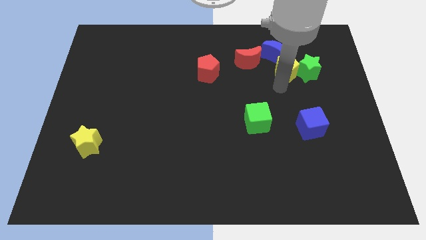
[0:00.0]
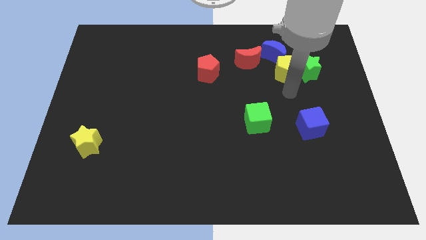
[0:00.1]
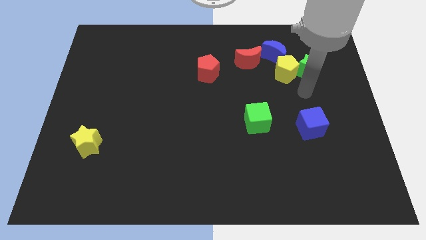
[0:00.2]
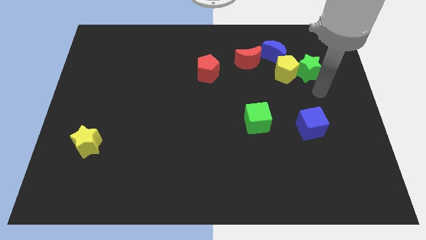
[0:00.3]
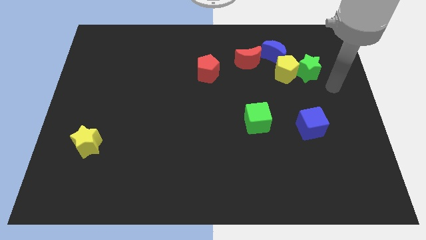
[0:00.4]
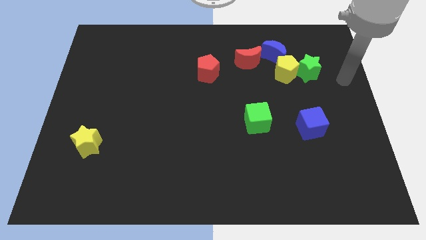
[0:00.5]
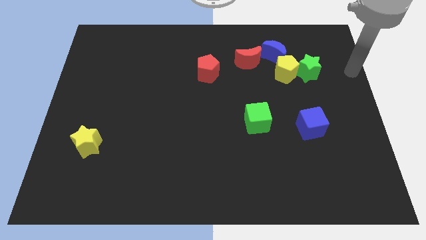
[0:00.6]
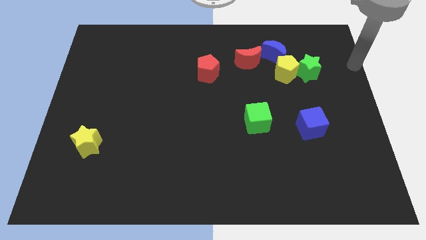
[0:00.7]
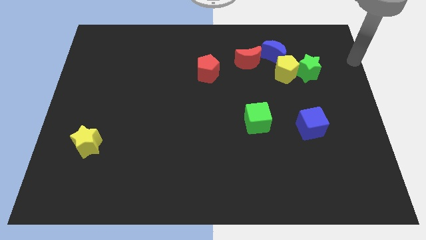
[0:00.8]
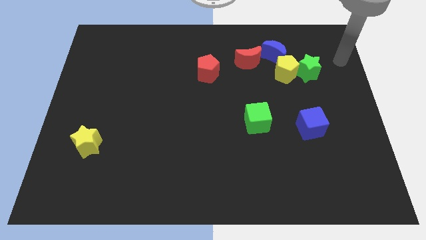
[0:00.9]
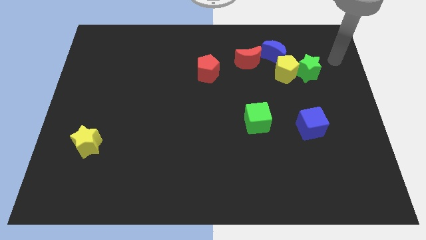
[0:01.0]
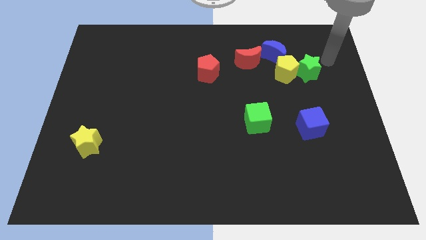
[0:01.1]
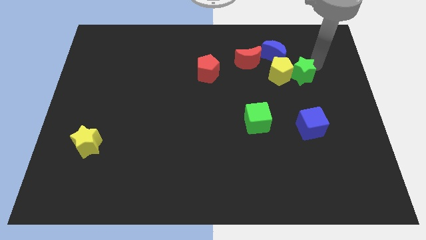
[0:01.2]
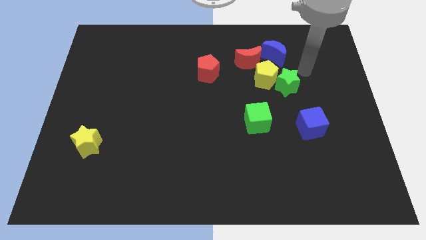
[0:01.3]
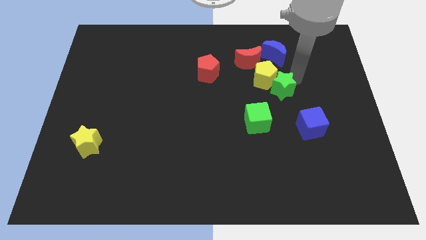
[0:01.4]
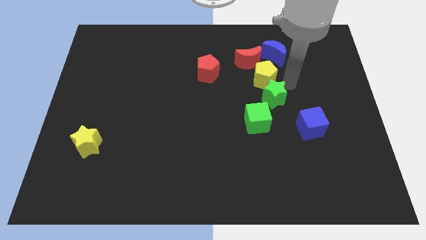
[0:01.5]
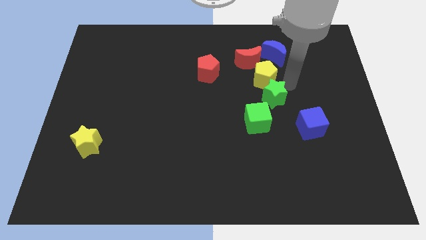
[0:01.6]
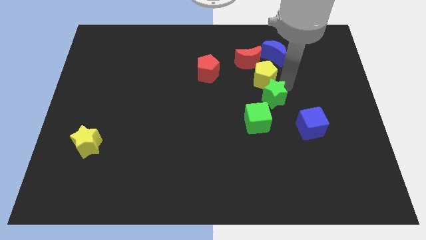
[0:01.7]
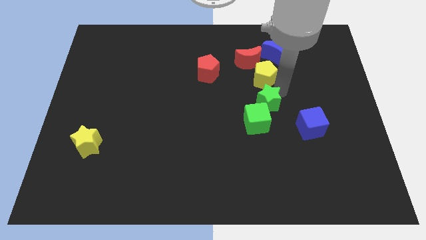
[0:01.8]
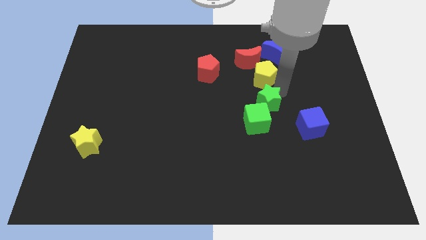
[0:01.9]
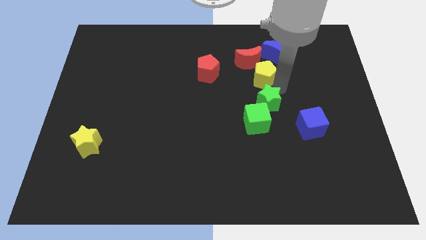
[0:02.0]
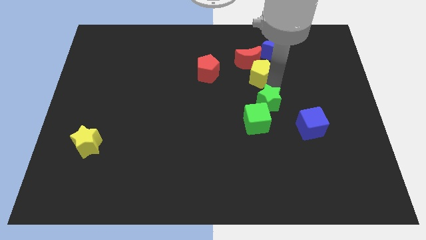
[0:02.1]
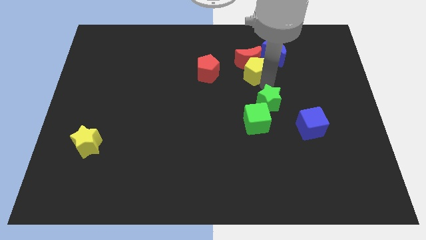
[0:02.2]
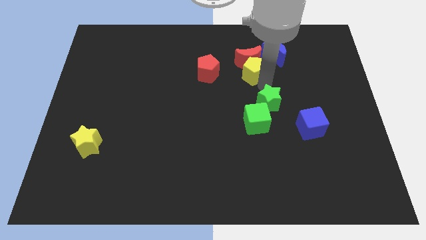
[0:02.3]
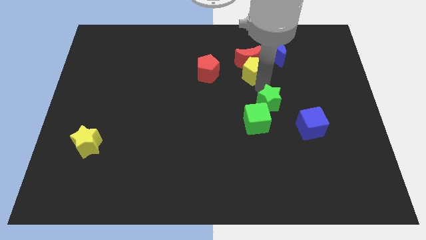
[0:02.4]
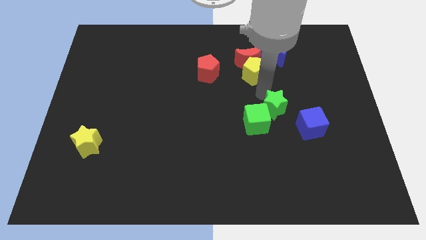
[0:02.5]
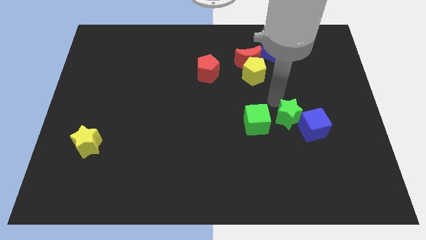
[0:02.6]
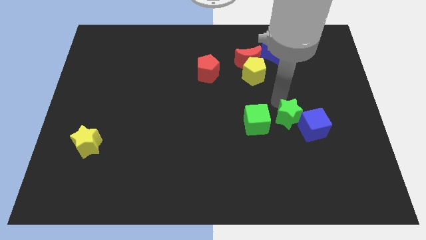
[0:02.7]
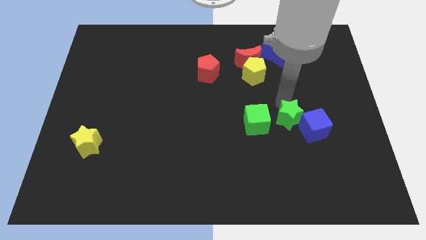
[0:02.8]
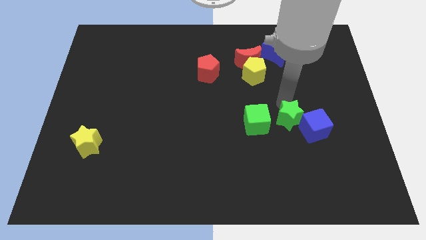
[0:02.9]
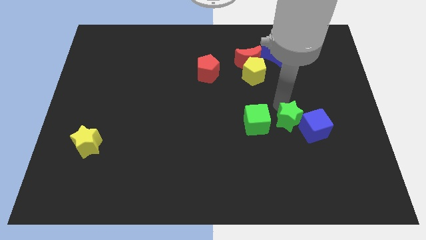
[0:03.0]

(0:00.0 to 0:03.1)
move the green star in between the cubes

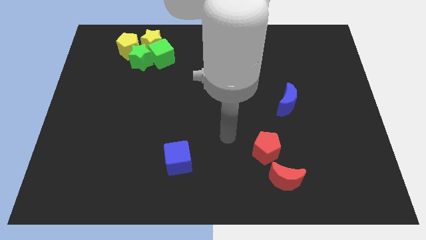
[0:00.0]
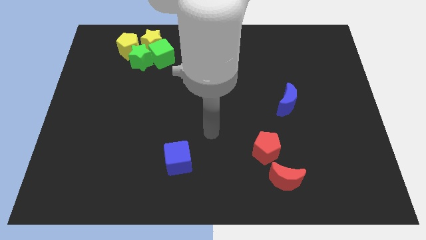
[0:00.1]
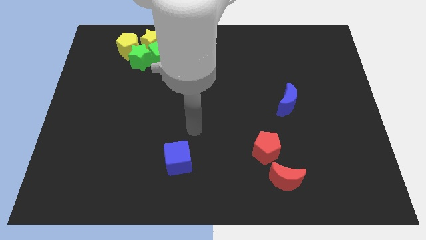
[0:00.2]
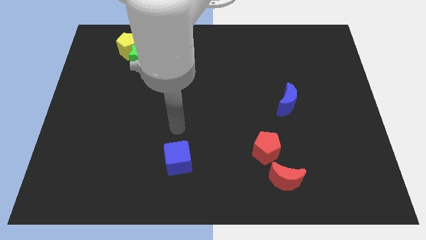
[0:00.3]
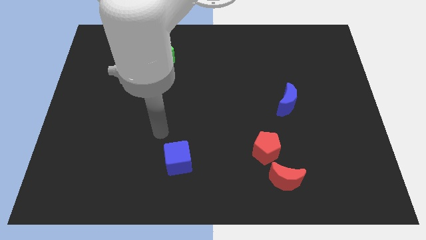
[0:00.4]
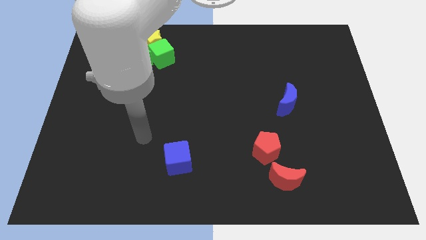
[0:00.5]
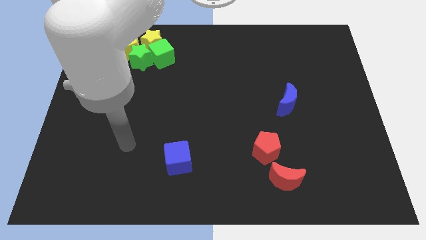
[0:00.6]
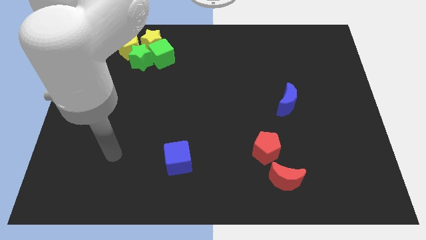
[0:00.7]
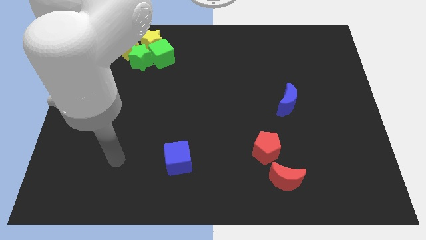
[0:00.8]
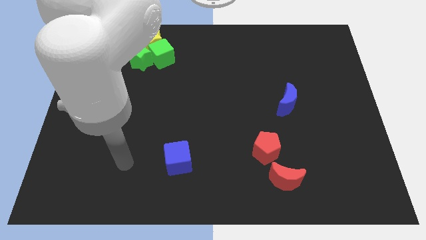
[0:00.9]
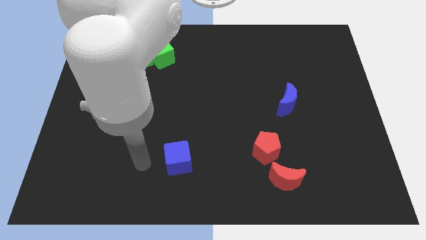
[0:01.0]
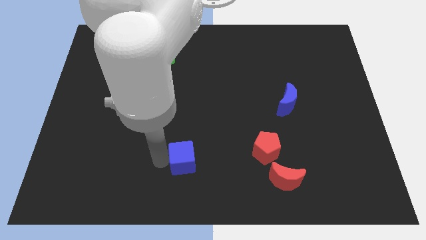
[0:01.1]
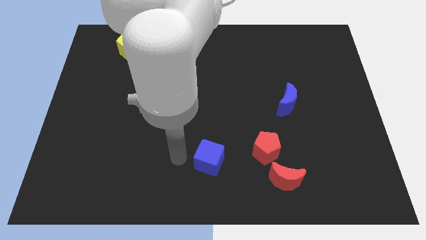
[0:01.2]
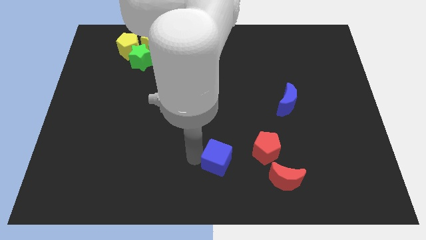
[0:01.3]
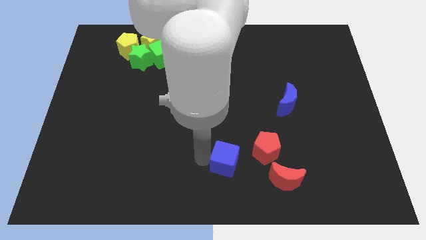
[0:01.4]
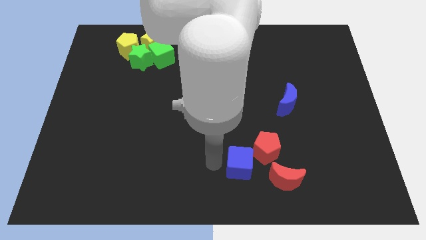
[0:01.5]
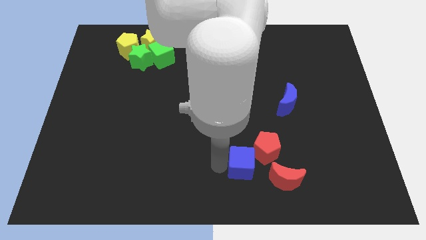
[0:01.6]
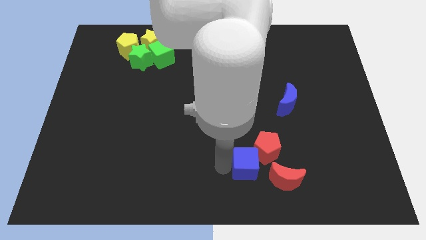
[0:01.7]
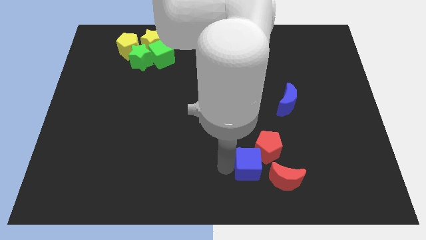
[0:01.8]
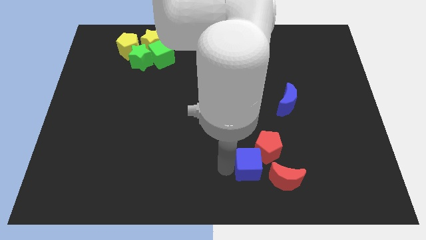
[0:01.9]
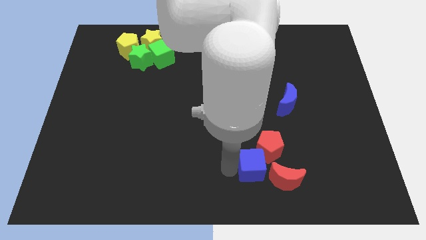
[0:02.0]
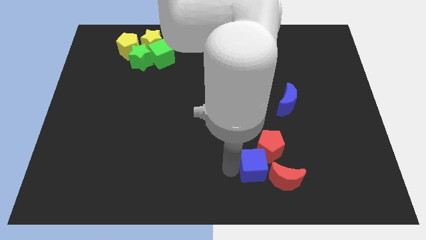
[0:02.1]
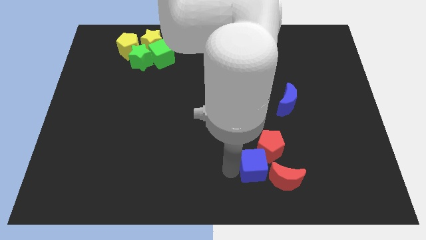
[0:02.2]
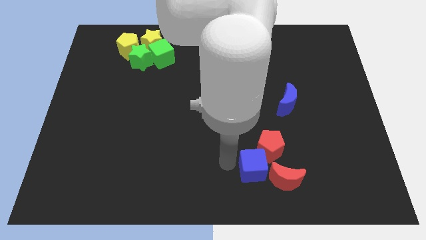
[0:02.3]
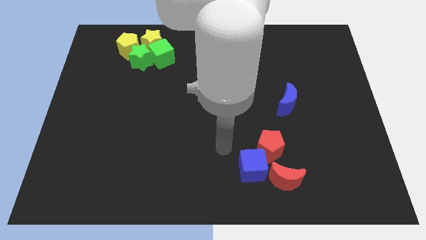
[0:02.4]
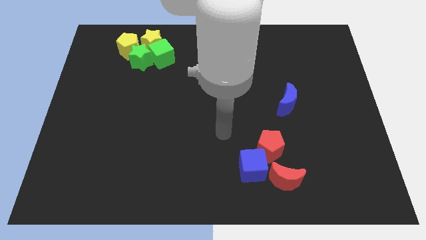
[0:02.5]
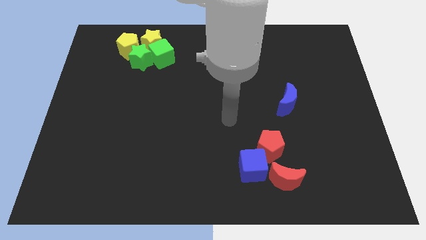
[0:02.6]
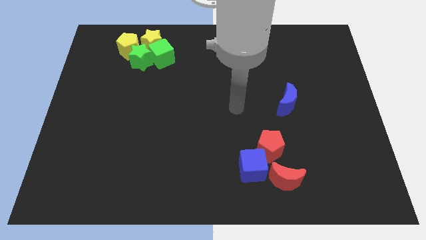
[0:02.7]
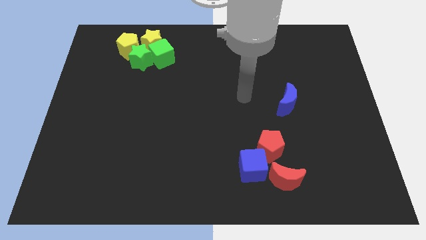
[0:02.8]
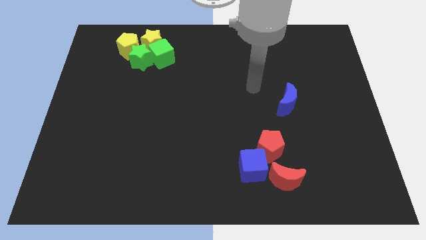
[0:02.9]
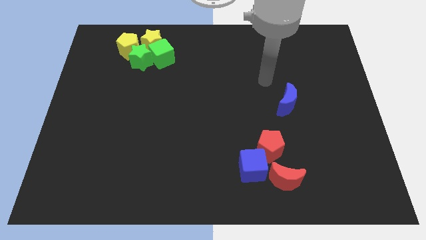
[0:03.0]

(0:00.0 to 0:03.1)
move the blue cube to the left of the red blocks

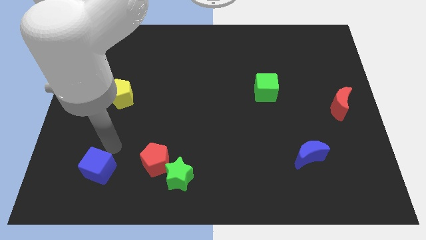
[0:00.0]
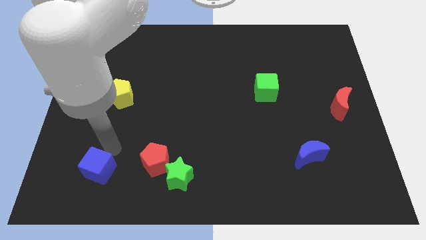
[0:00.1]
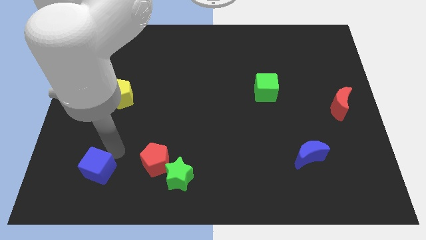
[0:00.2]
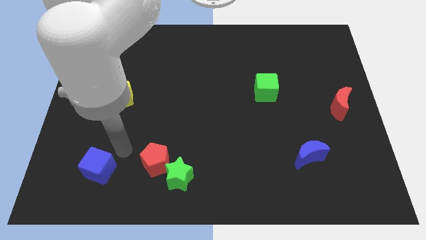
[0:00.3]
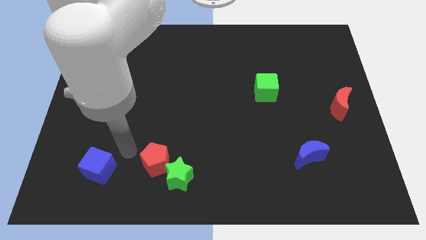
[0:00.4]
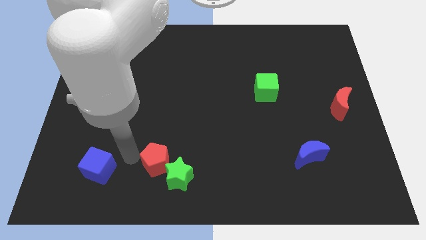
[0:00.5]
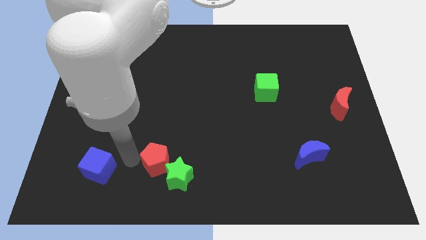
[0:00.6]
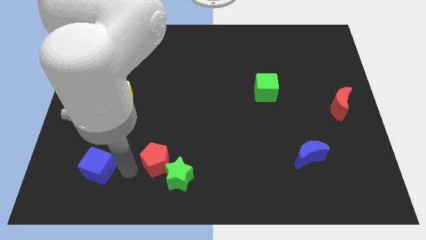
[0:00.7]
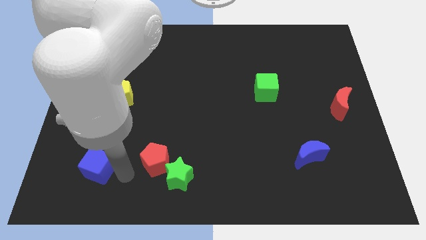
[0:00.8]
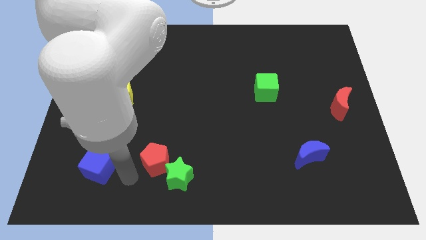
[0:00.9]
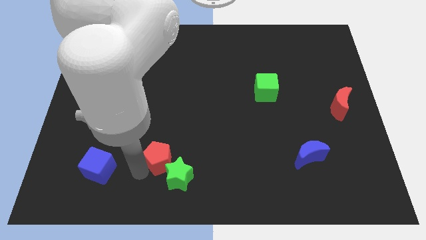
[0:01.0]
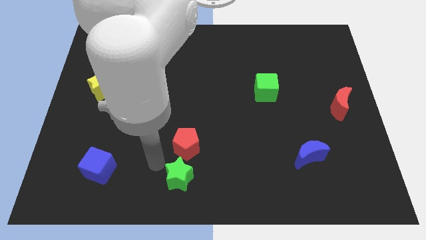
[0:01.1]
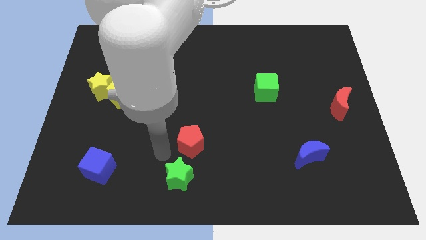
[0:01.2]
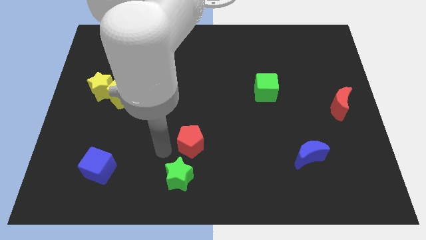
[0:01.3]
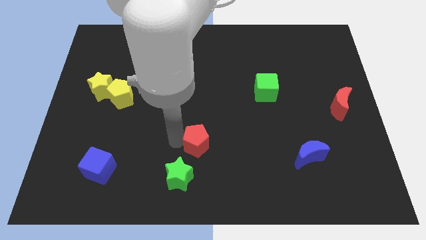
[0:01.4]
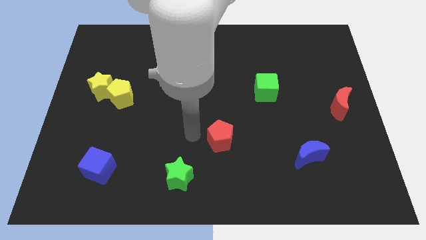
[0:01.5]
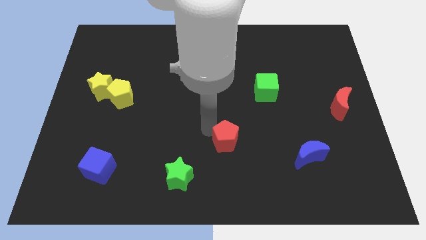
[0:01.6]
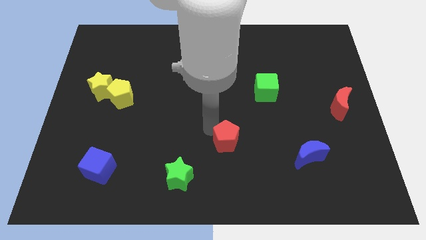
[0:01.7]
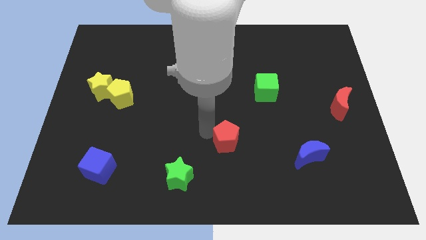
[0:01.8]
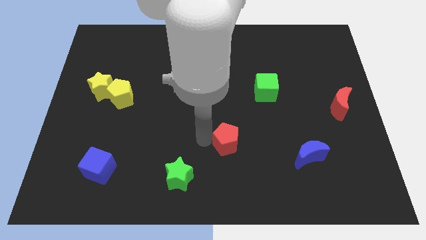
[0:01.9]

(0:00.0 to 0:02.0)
push the red pentagon towards the center of the board

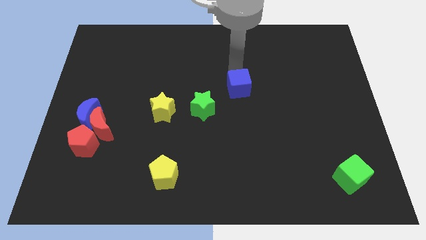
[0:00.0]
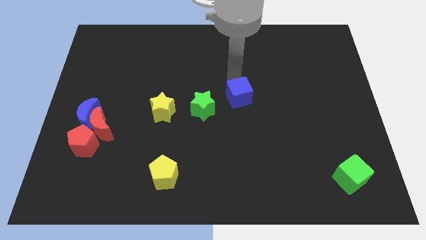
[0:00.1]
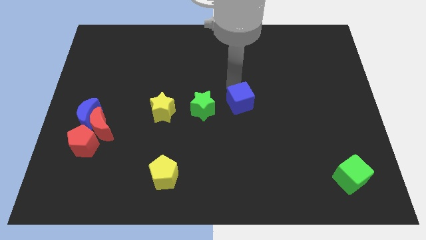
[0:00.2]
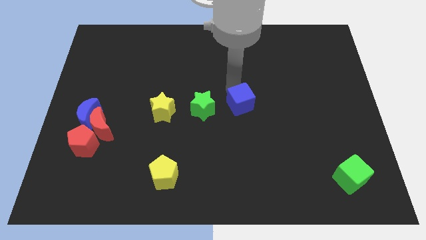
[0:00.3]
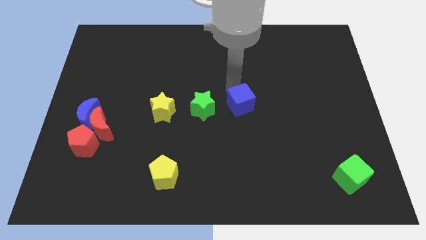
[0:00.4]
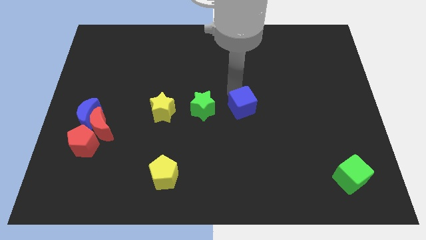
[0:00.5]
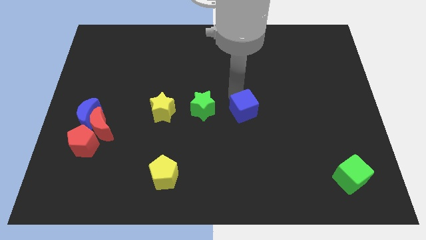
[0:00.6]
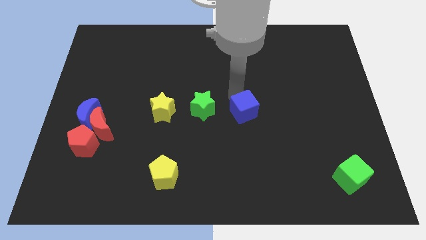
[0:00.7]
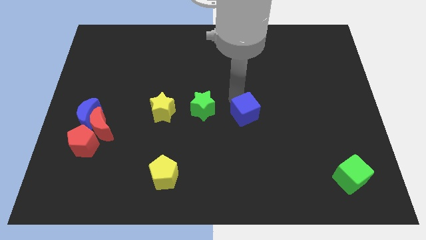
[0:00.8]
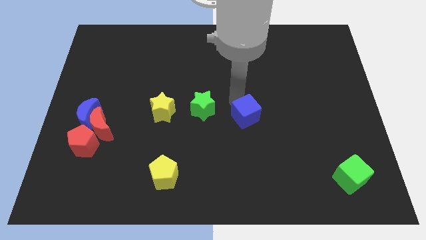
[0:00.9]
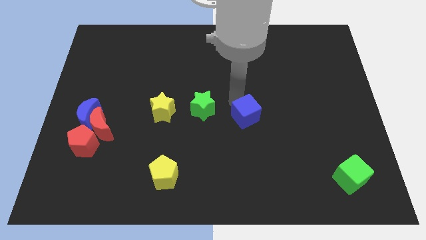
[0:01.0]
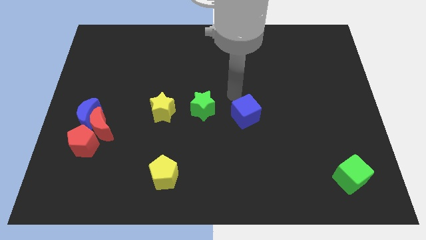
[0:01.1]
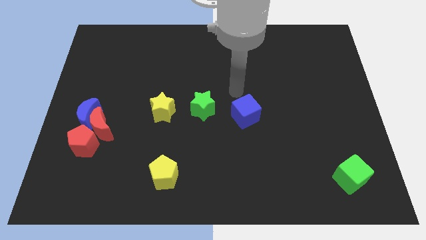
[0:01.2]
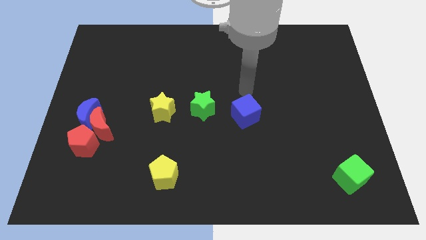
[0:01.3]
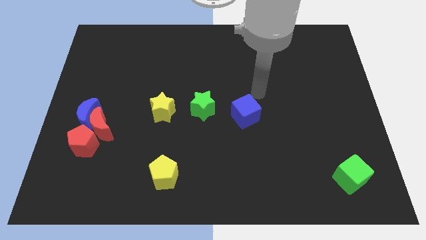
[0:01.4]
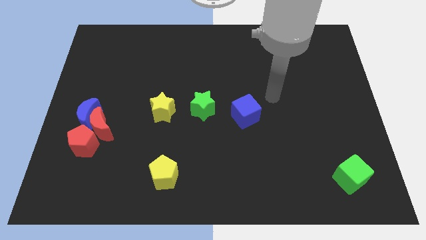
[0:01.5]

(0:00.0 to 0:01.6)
move the blue cube right beside the green star
